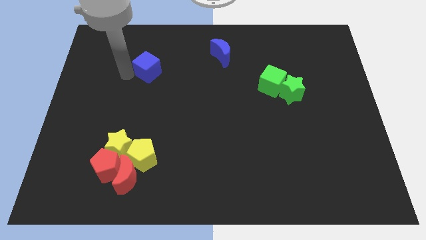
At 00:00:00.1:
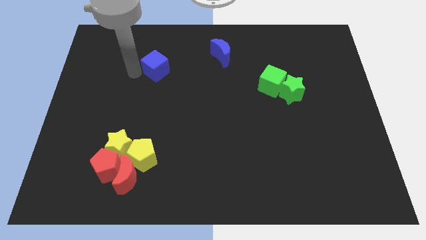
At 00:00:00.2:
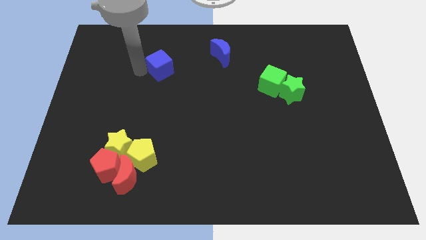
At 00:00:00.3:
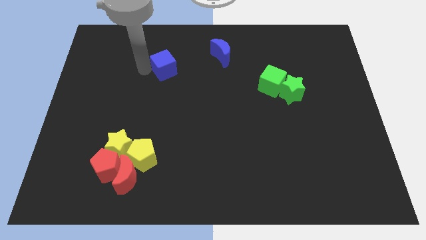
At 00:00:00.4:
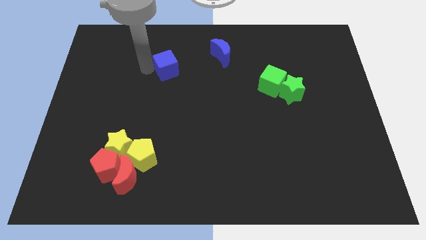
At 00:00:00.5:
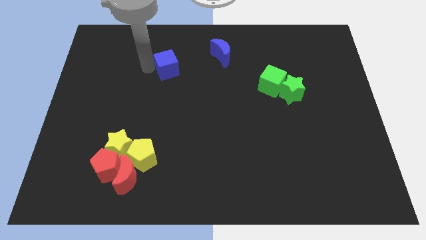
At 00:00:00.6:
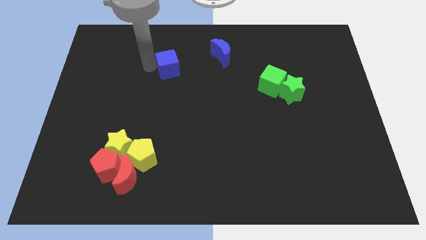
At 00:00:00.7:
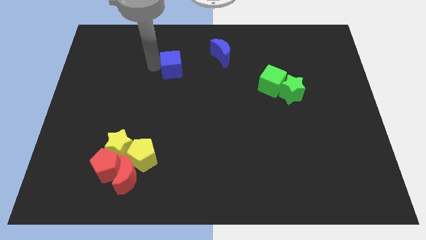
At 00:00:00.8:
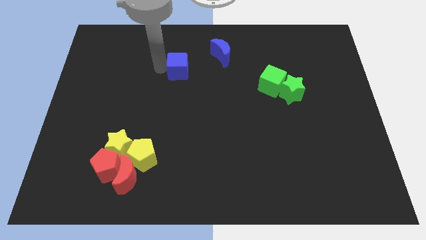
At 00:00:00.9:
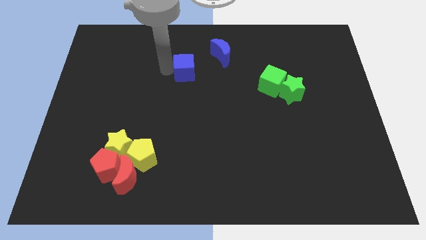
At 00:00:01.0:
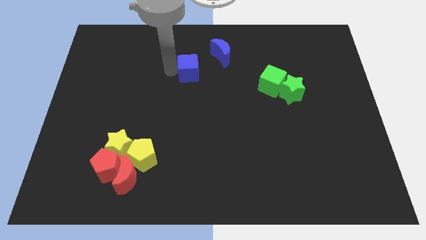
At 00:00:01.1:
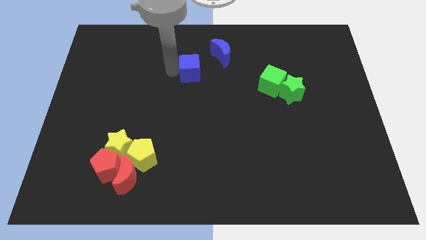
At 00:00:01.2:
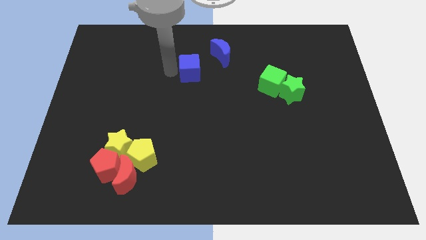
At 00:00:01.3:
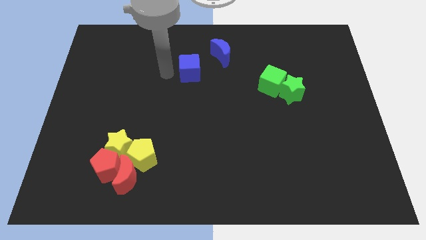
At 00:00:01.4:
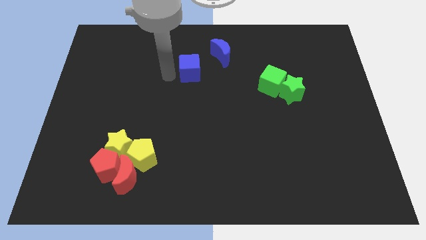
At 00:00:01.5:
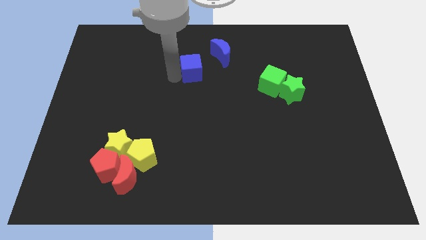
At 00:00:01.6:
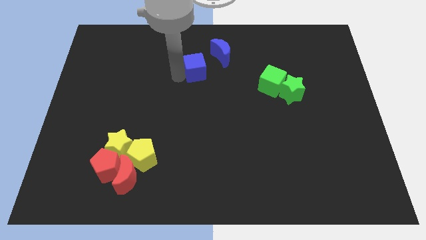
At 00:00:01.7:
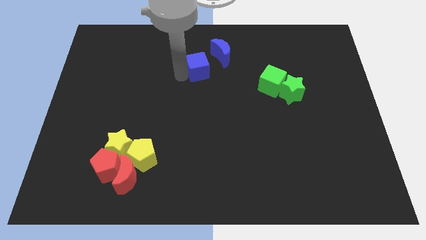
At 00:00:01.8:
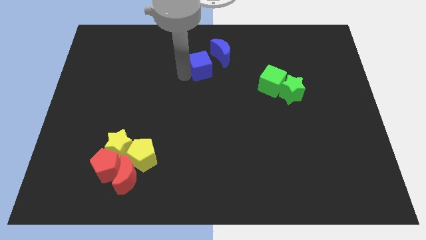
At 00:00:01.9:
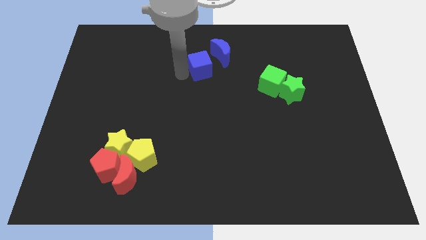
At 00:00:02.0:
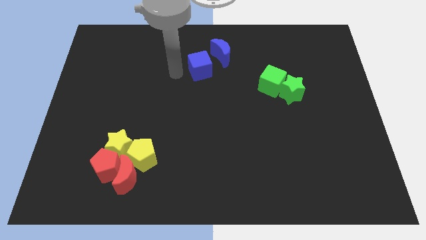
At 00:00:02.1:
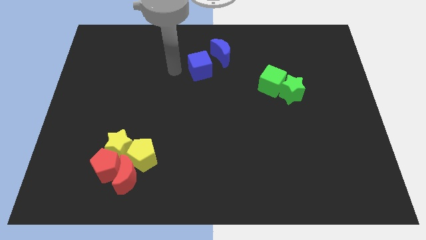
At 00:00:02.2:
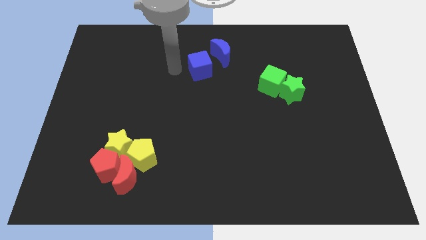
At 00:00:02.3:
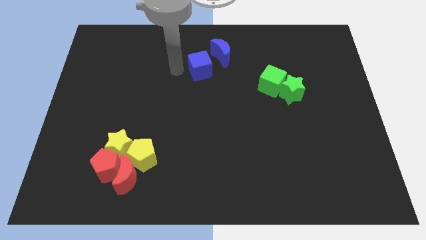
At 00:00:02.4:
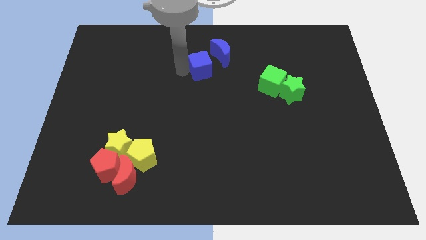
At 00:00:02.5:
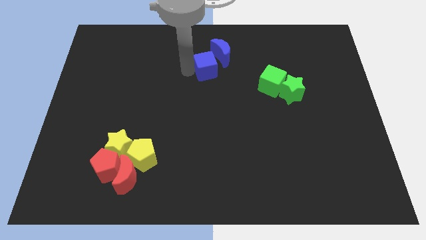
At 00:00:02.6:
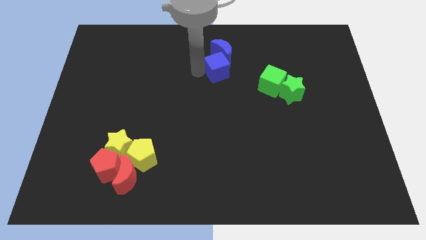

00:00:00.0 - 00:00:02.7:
move the blue cube into blue moon

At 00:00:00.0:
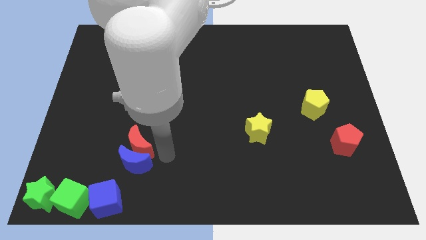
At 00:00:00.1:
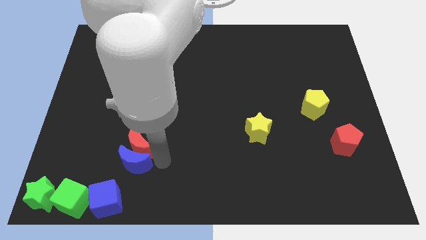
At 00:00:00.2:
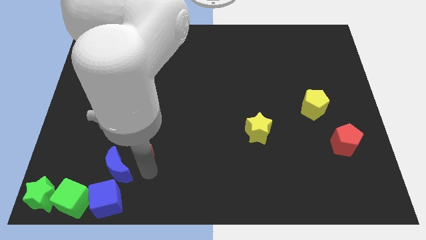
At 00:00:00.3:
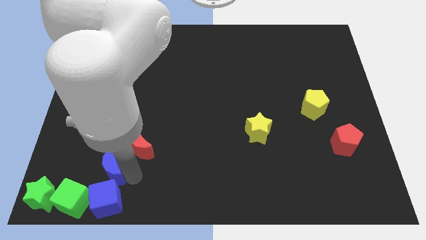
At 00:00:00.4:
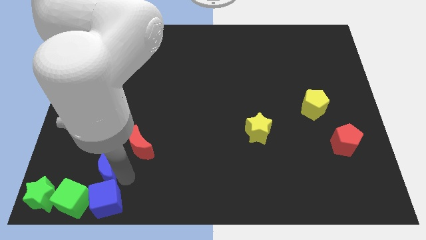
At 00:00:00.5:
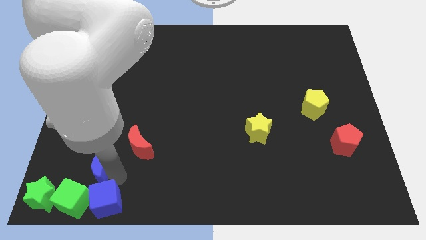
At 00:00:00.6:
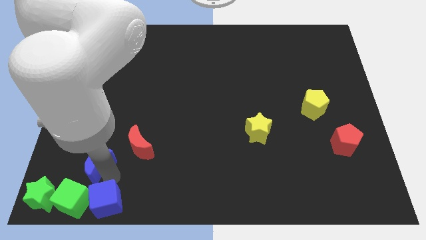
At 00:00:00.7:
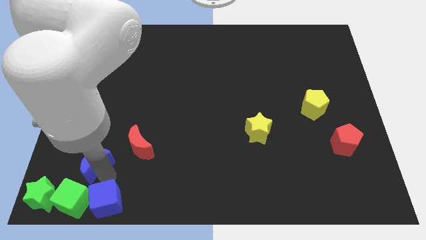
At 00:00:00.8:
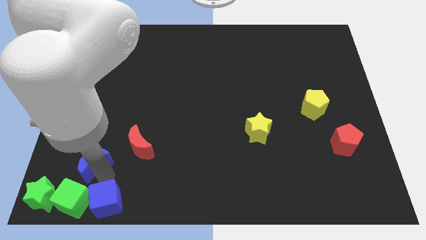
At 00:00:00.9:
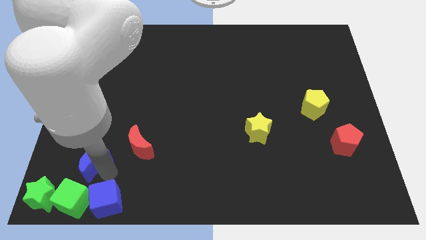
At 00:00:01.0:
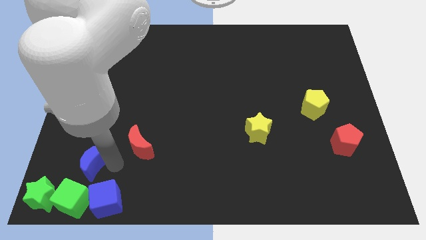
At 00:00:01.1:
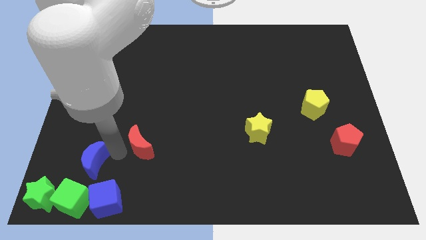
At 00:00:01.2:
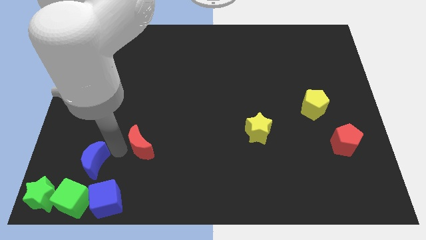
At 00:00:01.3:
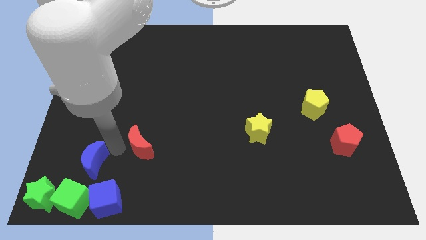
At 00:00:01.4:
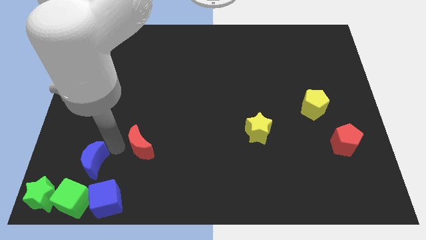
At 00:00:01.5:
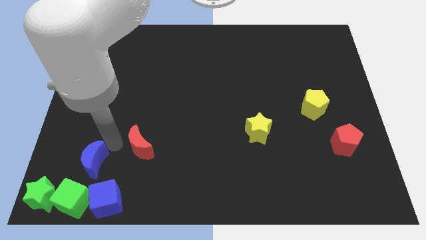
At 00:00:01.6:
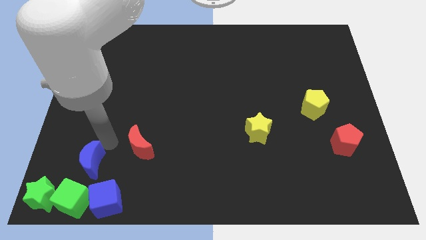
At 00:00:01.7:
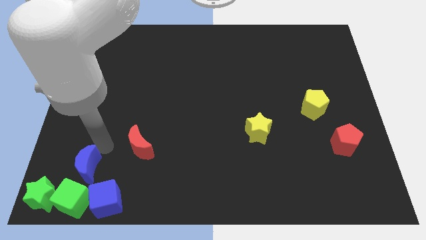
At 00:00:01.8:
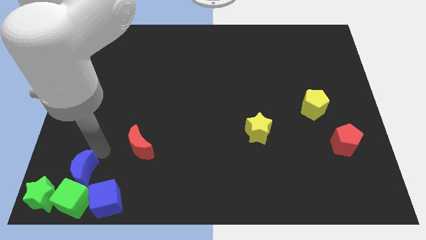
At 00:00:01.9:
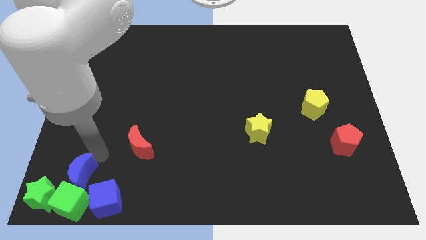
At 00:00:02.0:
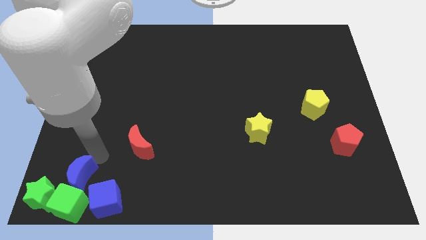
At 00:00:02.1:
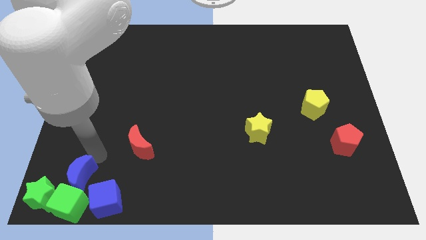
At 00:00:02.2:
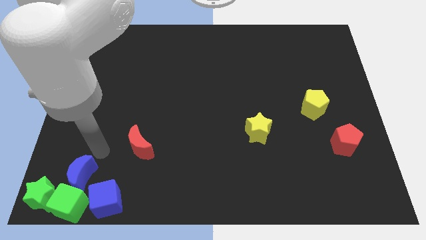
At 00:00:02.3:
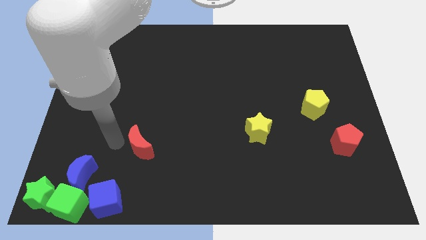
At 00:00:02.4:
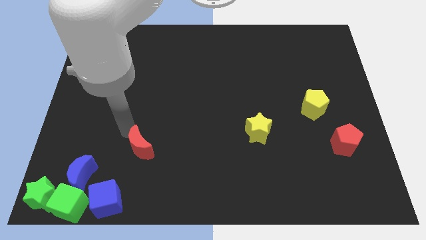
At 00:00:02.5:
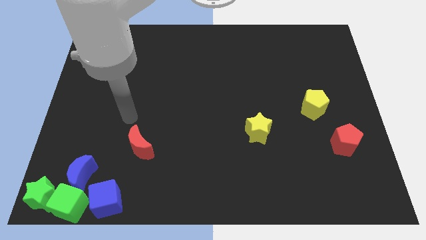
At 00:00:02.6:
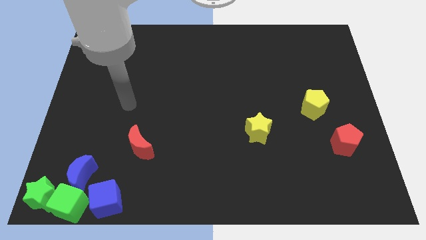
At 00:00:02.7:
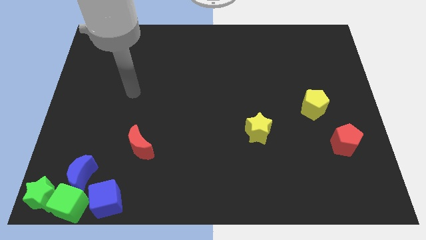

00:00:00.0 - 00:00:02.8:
place the blue moon above the green cube

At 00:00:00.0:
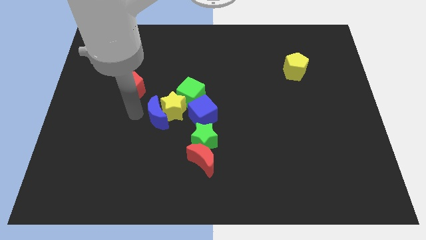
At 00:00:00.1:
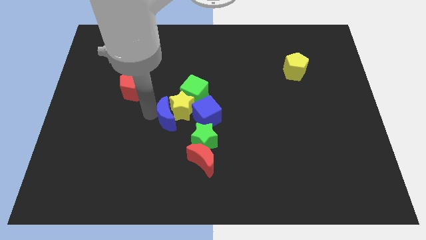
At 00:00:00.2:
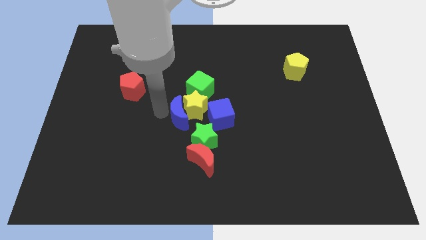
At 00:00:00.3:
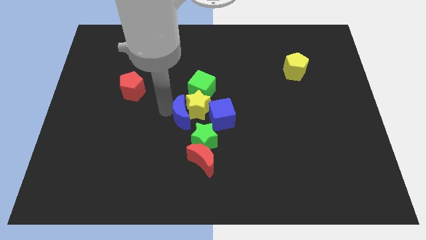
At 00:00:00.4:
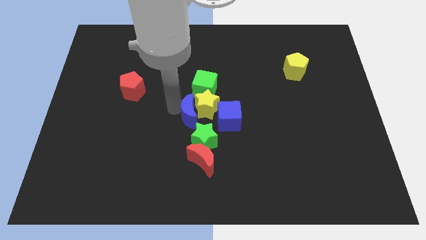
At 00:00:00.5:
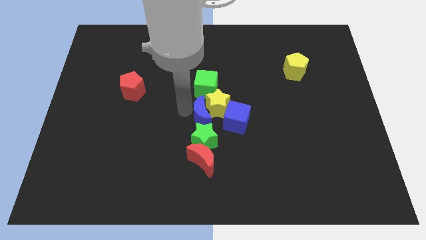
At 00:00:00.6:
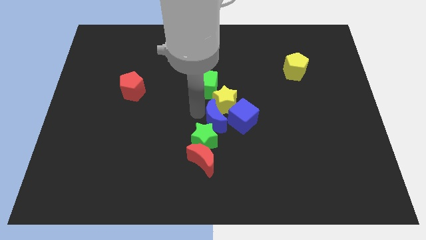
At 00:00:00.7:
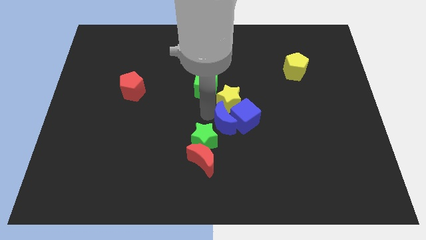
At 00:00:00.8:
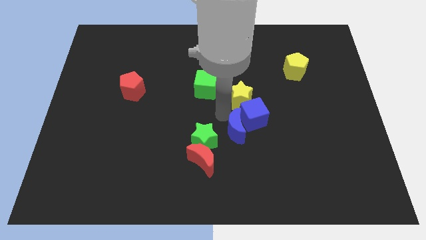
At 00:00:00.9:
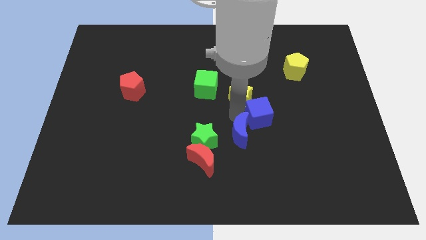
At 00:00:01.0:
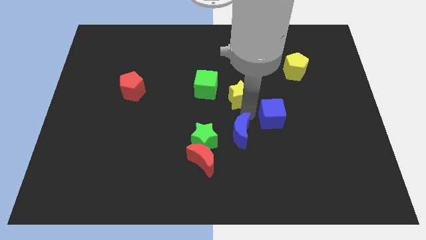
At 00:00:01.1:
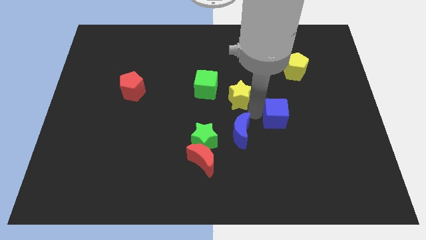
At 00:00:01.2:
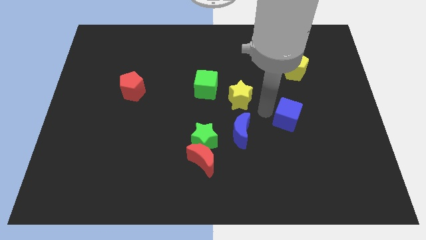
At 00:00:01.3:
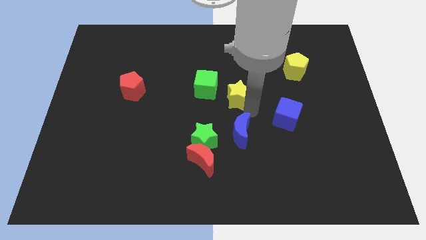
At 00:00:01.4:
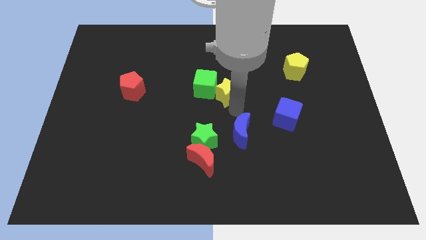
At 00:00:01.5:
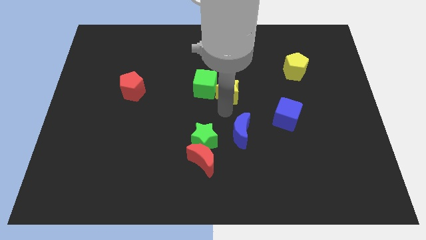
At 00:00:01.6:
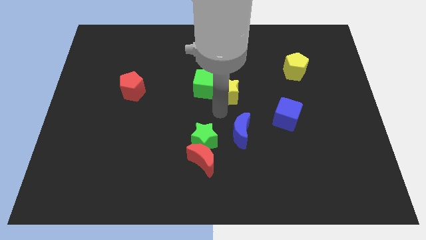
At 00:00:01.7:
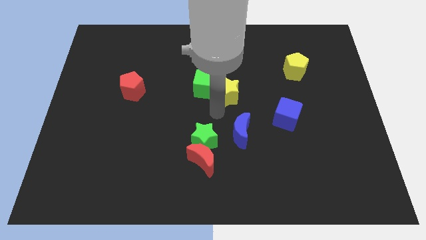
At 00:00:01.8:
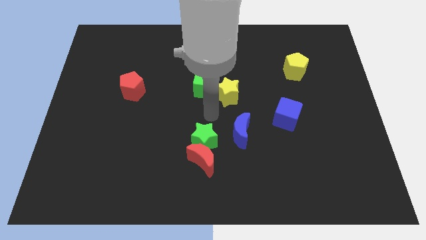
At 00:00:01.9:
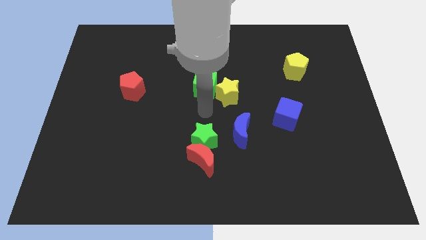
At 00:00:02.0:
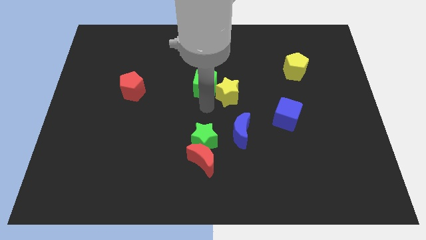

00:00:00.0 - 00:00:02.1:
separate the yellow star from the blue cube

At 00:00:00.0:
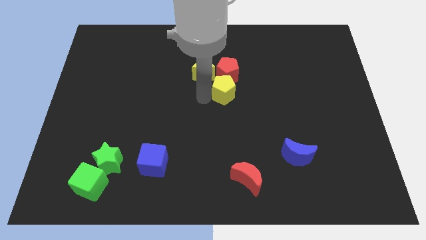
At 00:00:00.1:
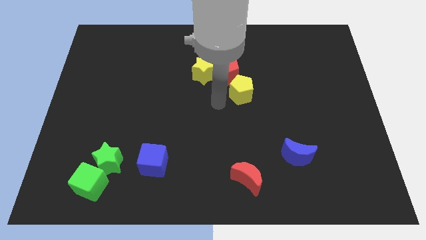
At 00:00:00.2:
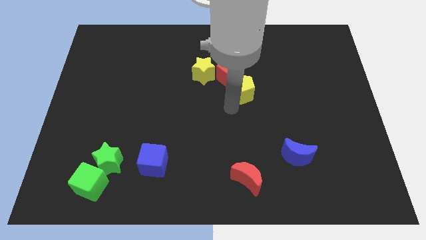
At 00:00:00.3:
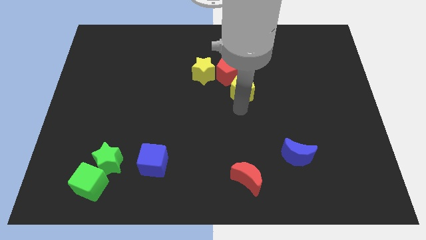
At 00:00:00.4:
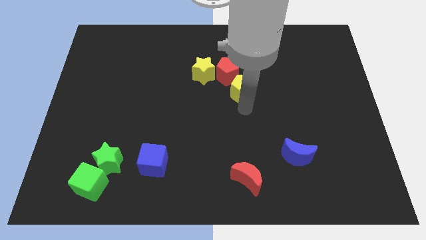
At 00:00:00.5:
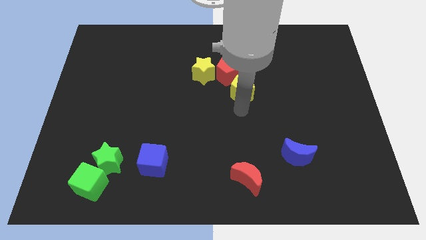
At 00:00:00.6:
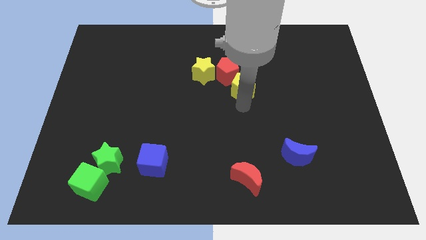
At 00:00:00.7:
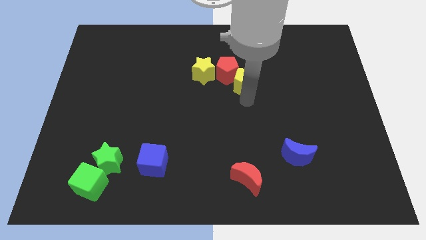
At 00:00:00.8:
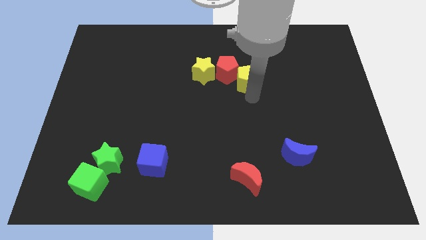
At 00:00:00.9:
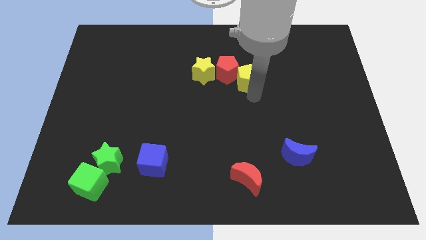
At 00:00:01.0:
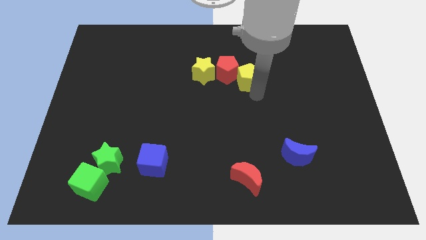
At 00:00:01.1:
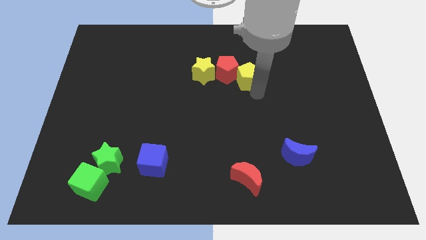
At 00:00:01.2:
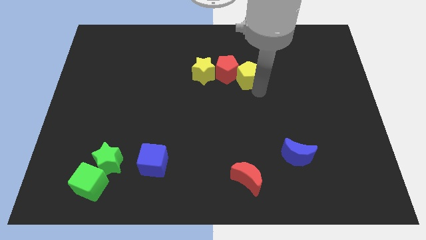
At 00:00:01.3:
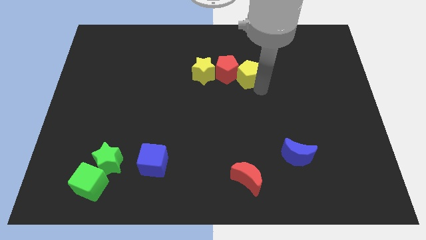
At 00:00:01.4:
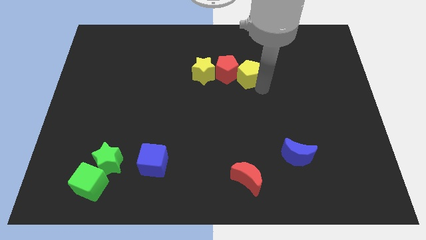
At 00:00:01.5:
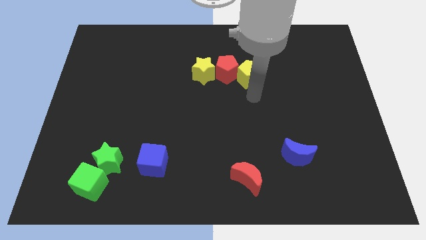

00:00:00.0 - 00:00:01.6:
place the yellow pentagon right to the red pentagon
